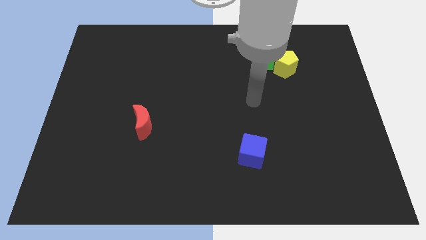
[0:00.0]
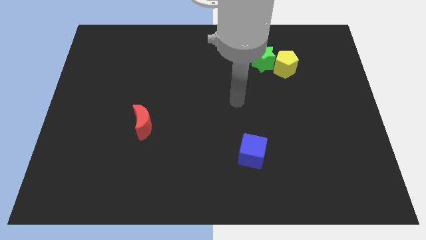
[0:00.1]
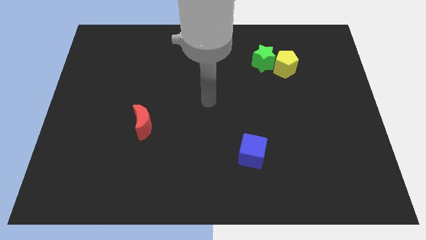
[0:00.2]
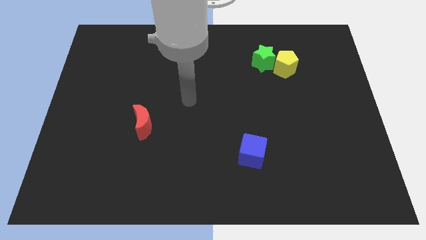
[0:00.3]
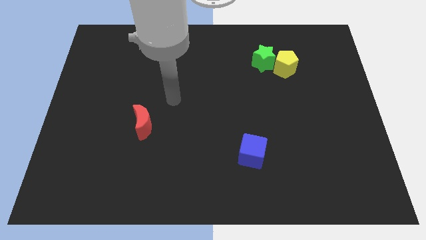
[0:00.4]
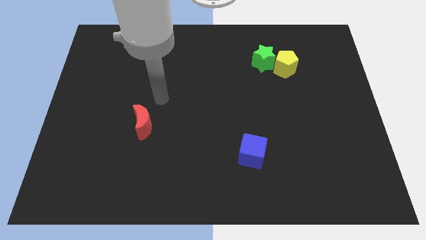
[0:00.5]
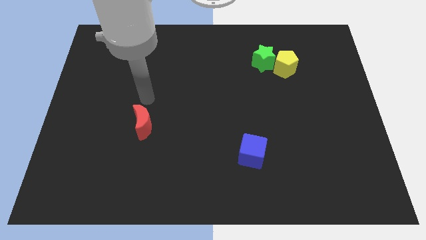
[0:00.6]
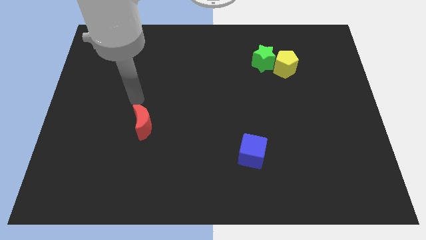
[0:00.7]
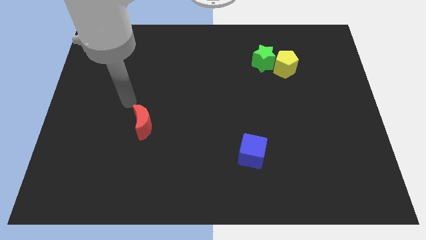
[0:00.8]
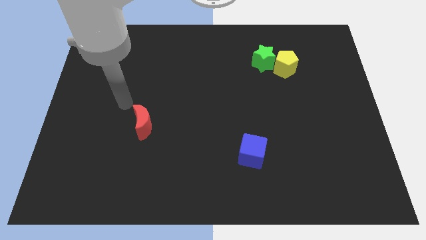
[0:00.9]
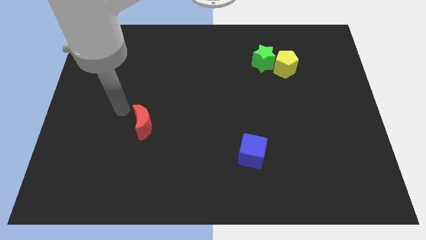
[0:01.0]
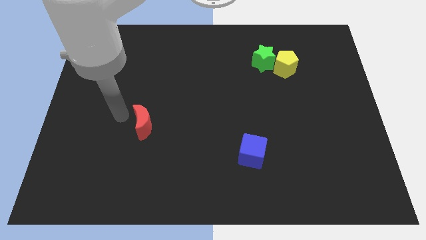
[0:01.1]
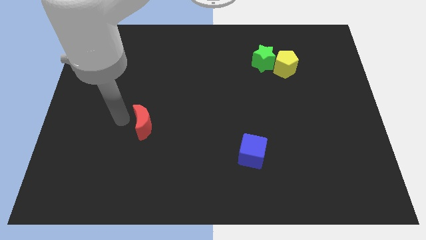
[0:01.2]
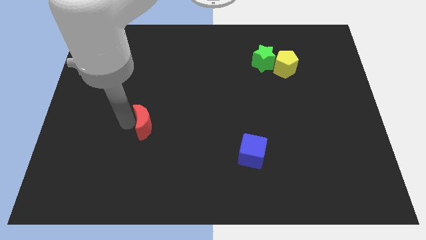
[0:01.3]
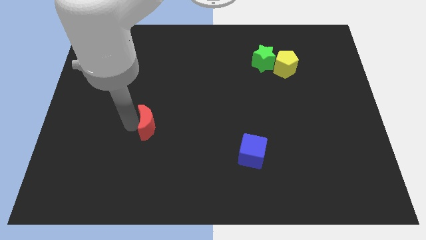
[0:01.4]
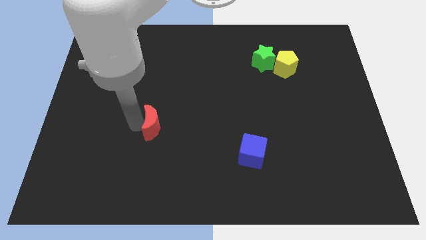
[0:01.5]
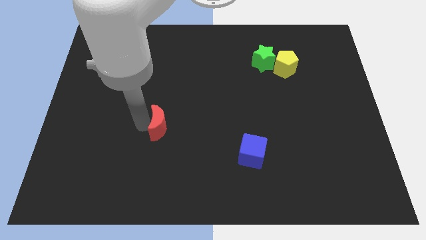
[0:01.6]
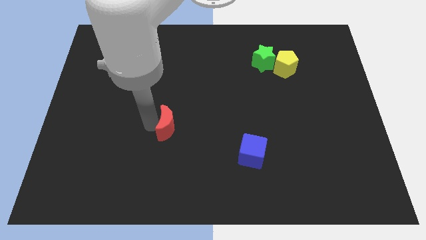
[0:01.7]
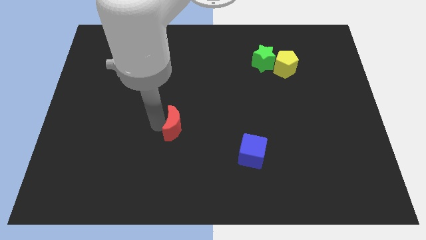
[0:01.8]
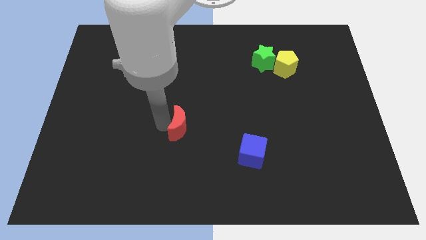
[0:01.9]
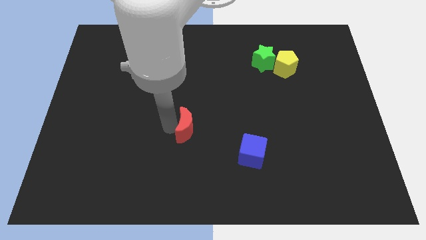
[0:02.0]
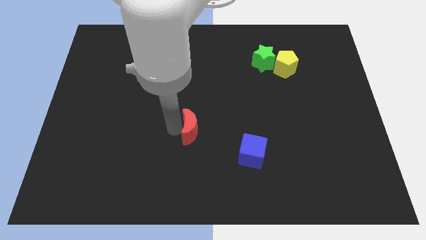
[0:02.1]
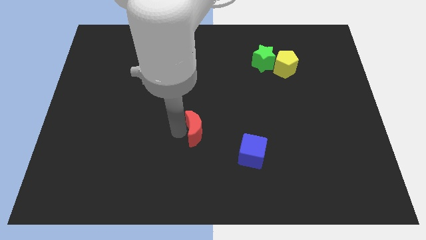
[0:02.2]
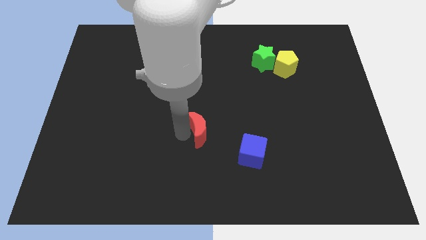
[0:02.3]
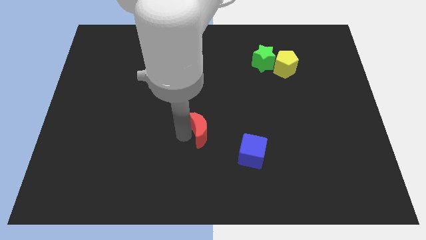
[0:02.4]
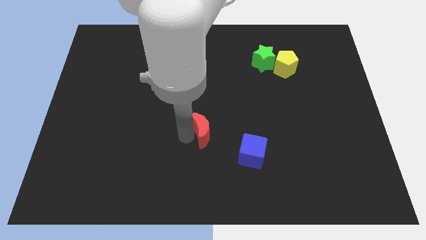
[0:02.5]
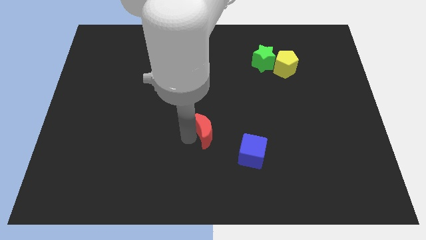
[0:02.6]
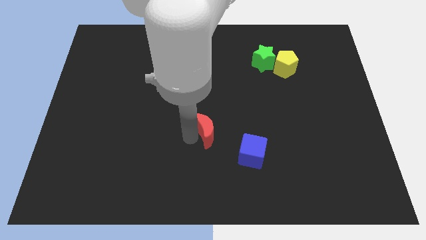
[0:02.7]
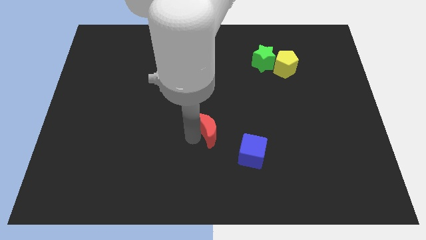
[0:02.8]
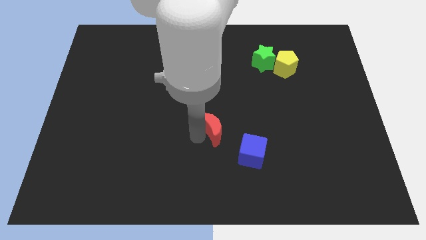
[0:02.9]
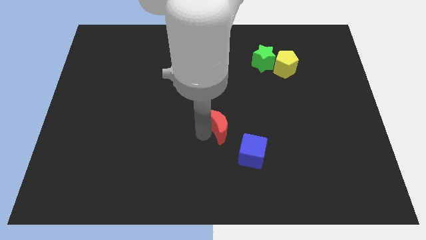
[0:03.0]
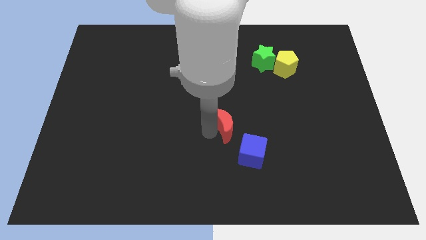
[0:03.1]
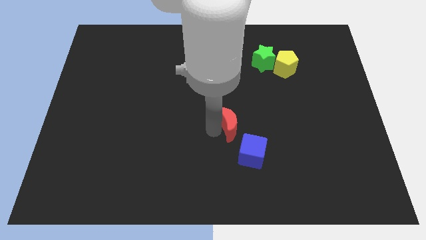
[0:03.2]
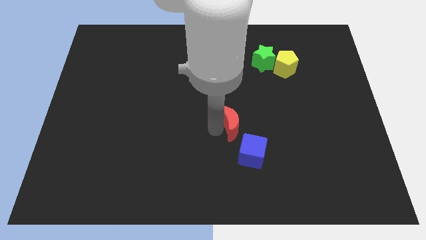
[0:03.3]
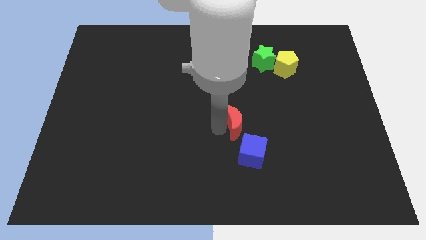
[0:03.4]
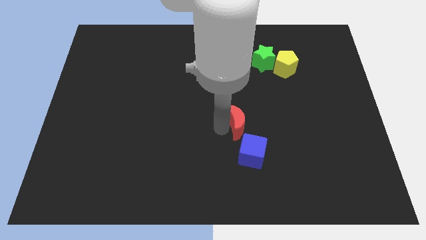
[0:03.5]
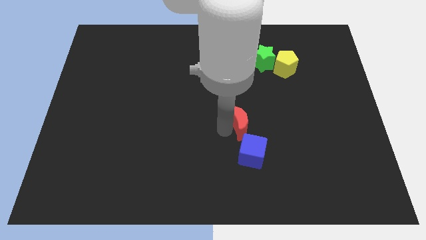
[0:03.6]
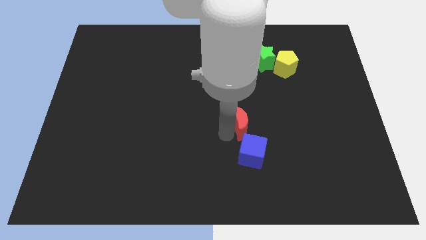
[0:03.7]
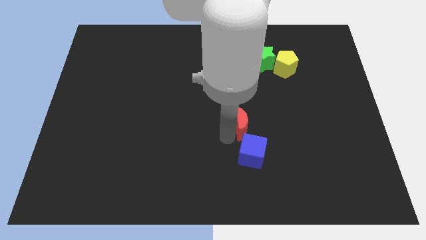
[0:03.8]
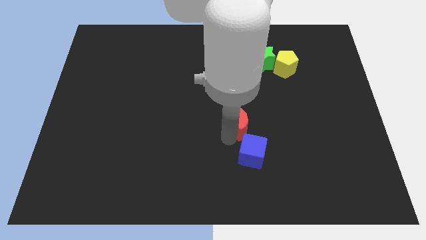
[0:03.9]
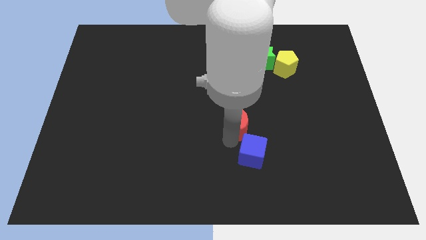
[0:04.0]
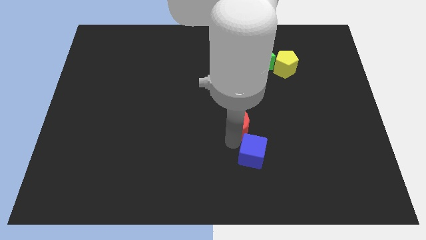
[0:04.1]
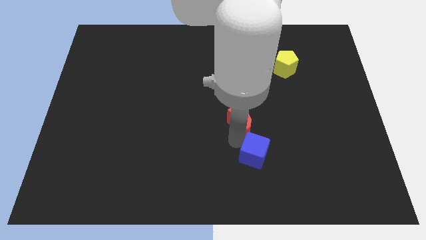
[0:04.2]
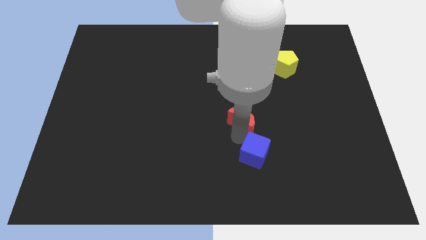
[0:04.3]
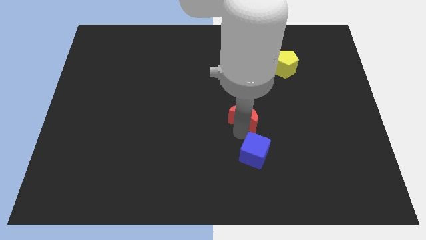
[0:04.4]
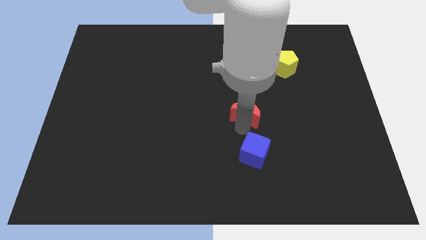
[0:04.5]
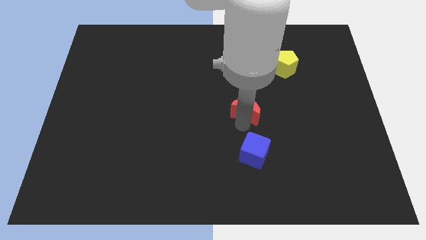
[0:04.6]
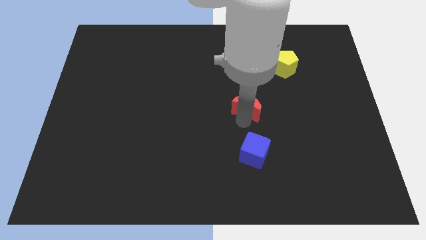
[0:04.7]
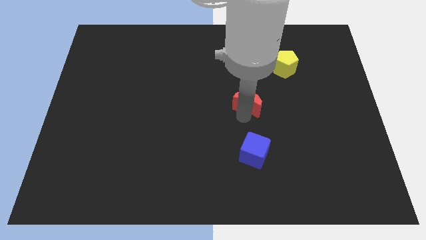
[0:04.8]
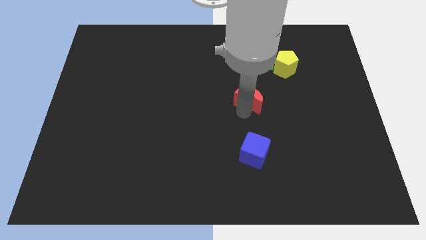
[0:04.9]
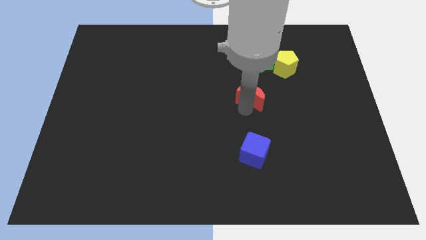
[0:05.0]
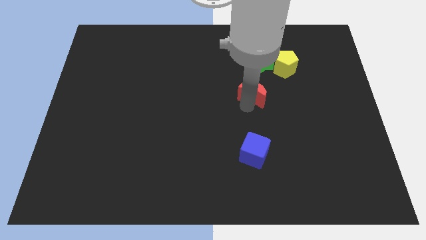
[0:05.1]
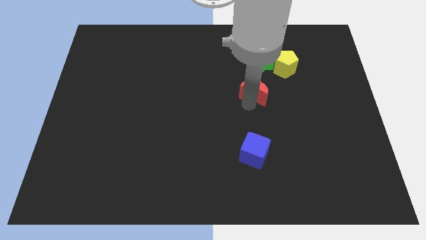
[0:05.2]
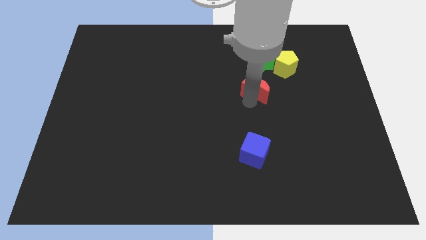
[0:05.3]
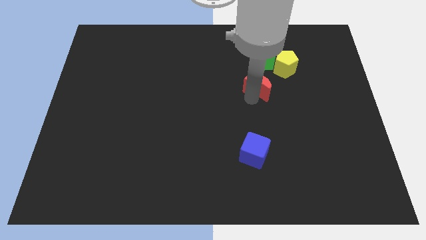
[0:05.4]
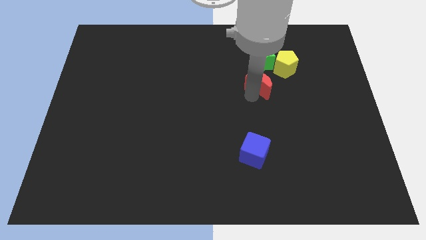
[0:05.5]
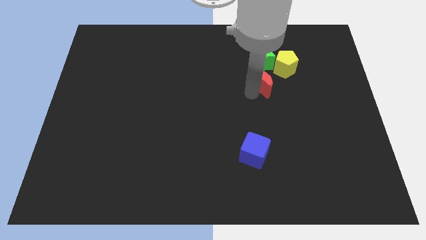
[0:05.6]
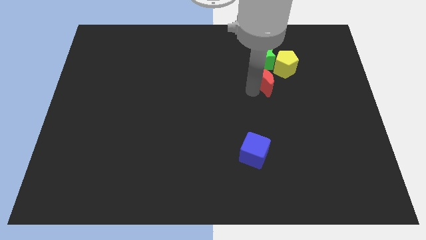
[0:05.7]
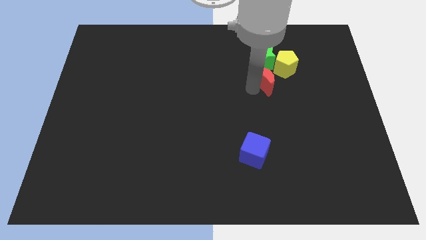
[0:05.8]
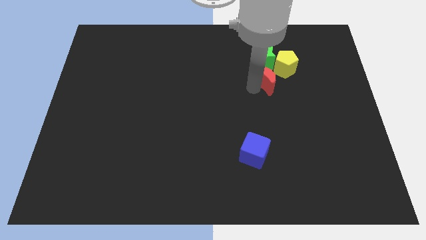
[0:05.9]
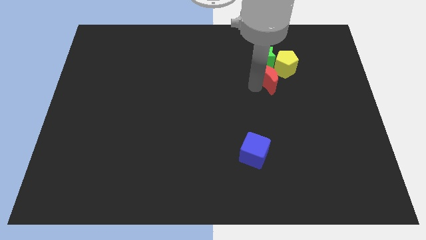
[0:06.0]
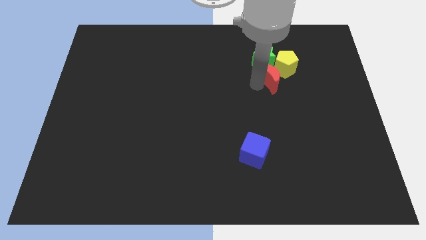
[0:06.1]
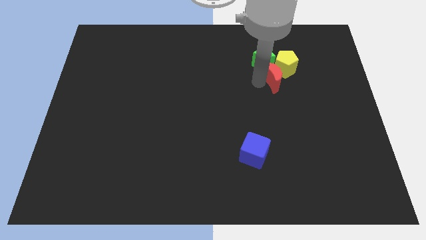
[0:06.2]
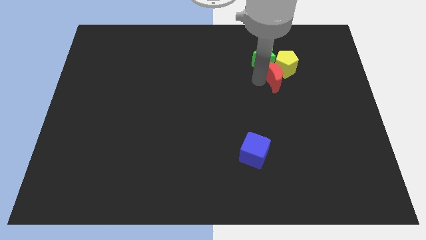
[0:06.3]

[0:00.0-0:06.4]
slide the moon towards the green star

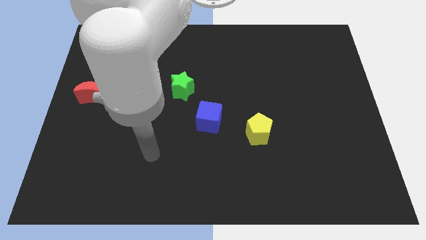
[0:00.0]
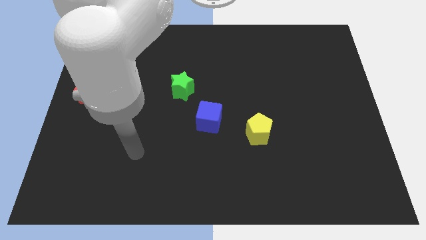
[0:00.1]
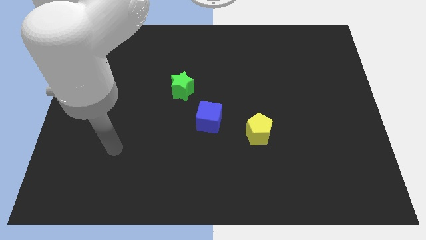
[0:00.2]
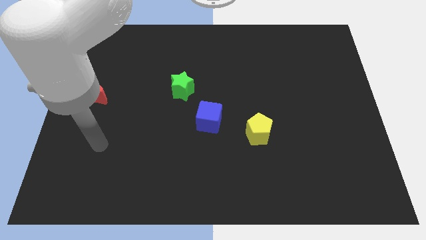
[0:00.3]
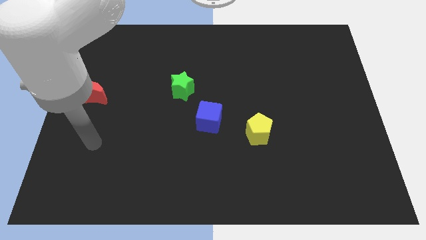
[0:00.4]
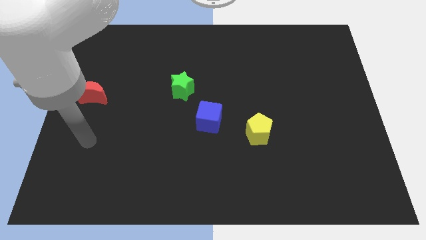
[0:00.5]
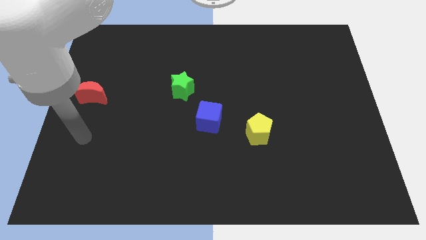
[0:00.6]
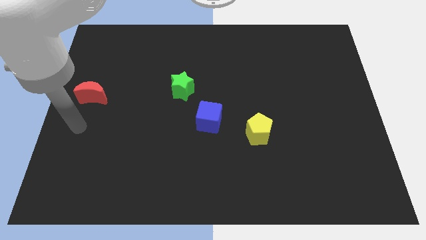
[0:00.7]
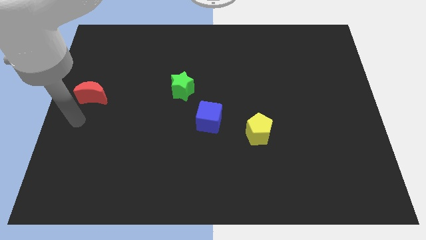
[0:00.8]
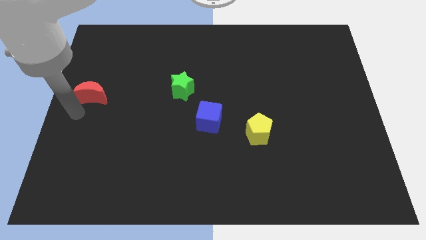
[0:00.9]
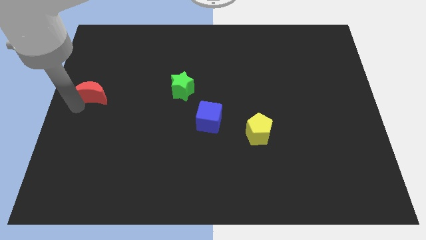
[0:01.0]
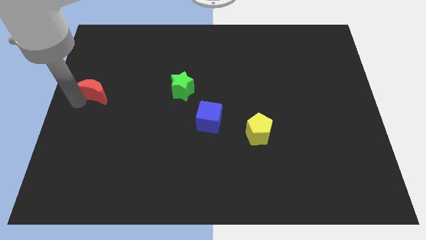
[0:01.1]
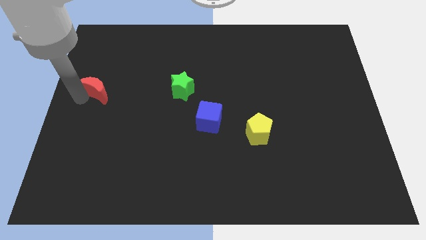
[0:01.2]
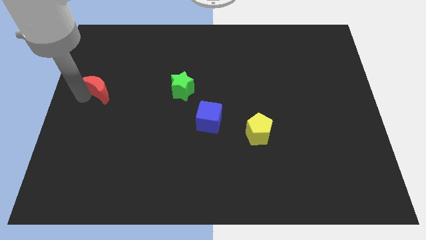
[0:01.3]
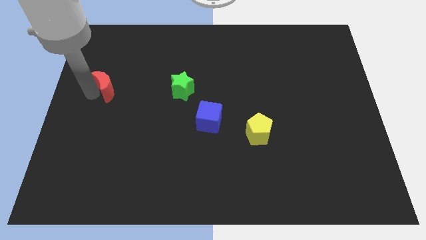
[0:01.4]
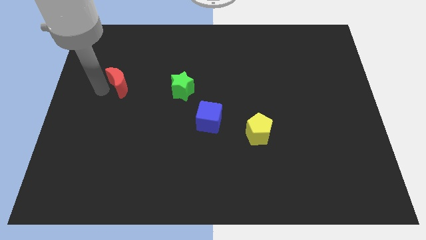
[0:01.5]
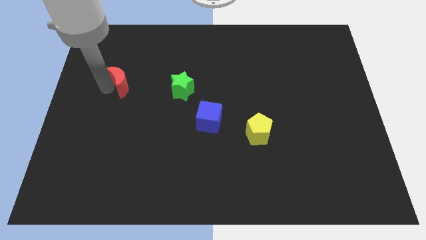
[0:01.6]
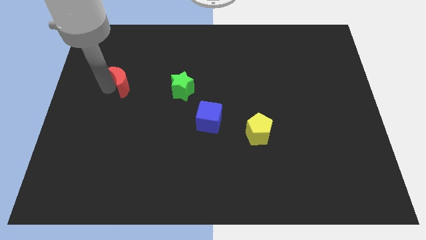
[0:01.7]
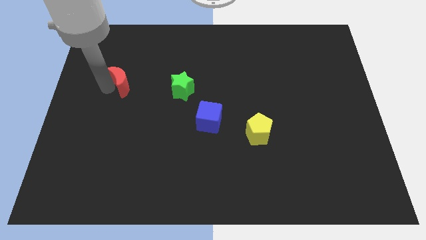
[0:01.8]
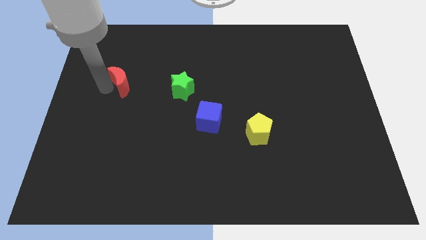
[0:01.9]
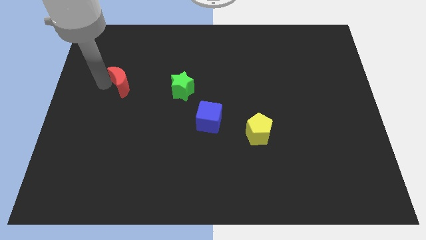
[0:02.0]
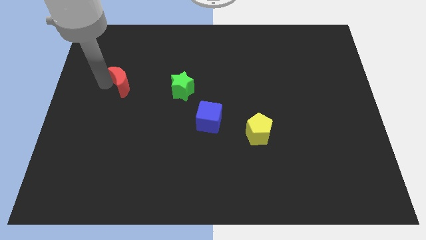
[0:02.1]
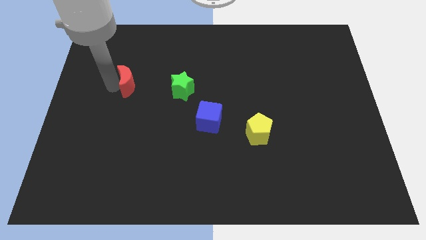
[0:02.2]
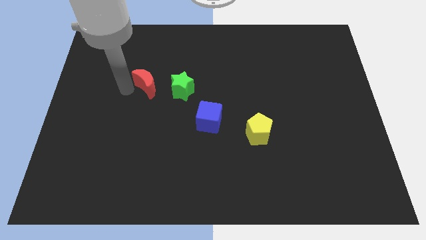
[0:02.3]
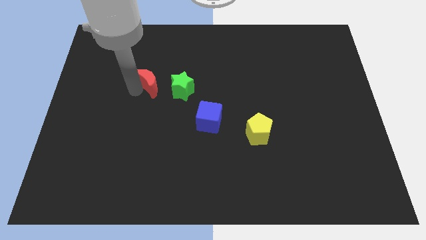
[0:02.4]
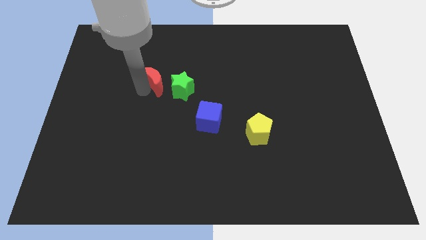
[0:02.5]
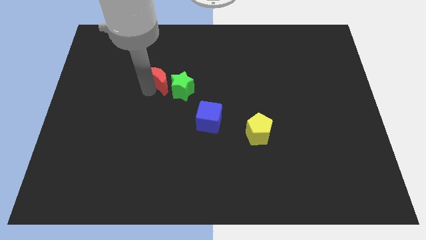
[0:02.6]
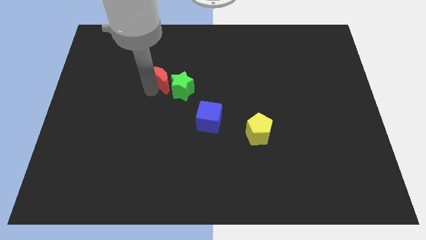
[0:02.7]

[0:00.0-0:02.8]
slide the red moon close to the green block
